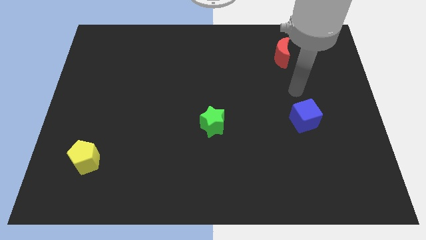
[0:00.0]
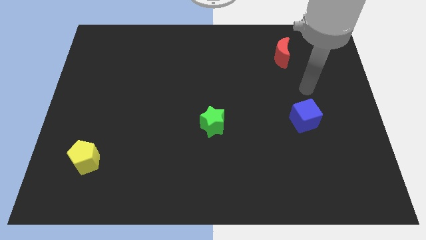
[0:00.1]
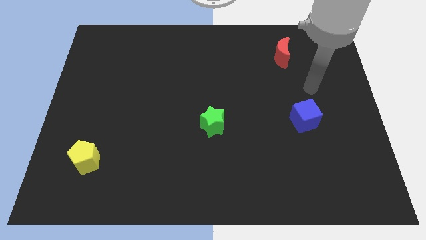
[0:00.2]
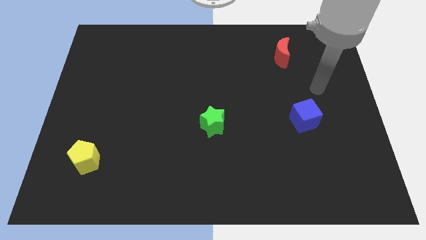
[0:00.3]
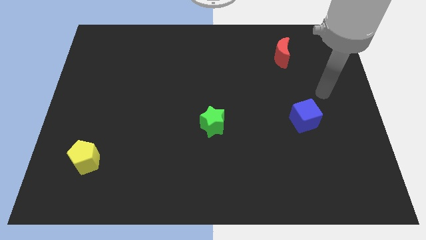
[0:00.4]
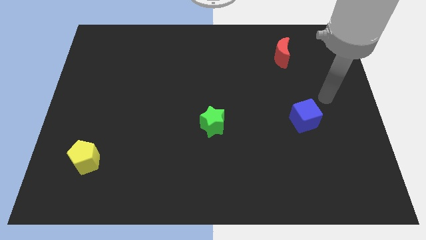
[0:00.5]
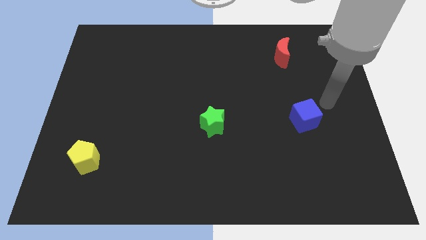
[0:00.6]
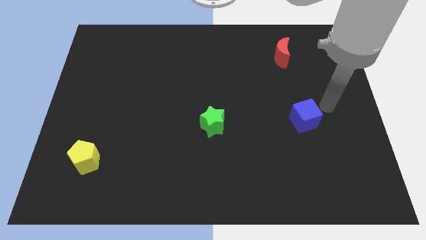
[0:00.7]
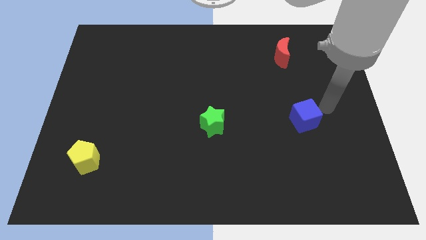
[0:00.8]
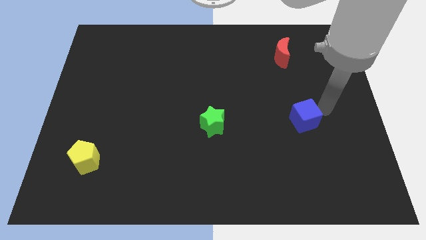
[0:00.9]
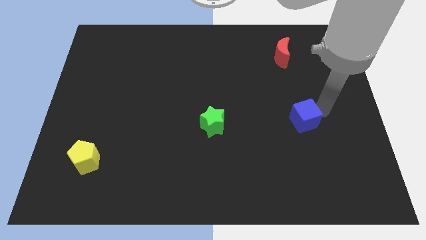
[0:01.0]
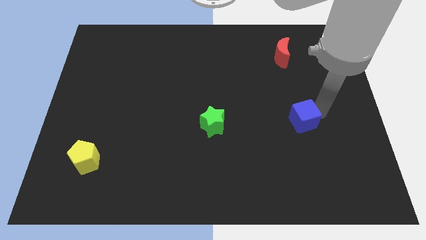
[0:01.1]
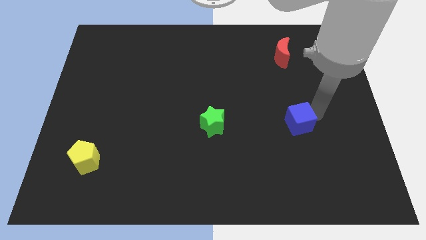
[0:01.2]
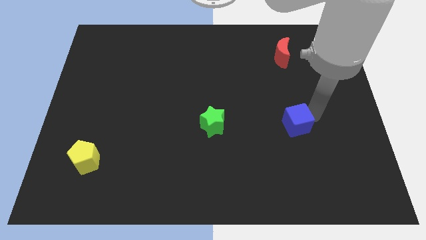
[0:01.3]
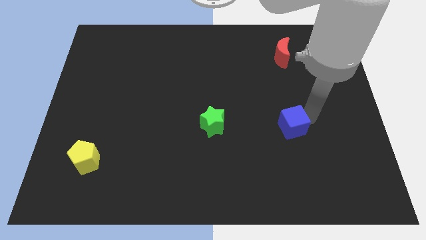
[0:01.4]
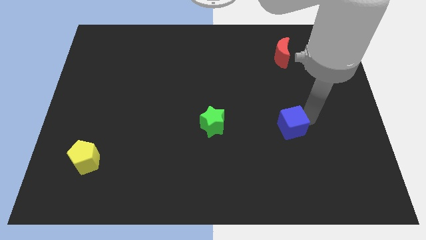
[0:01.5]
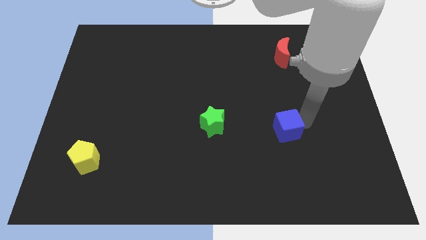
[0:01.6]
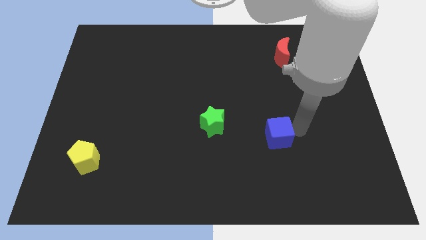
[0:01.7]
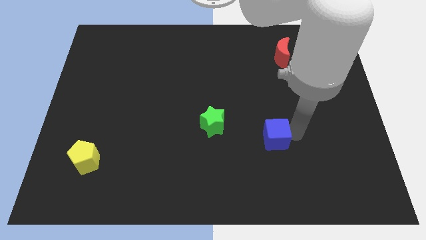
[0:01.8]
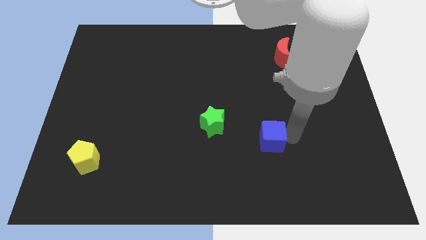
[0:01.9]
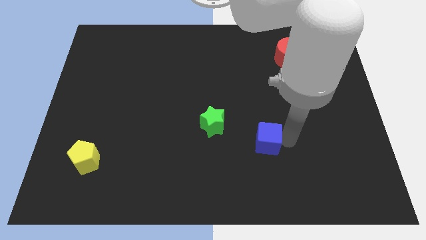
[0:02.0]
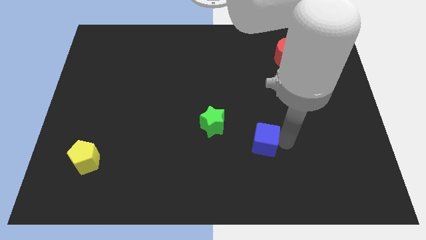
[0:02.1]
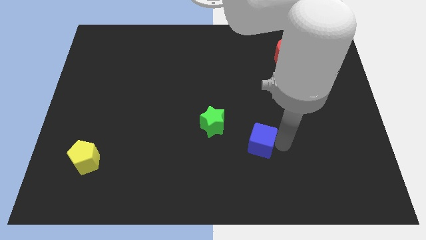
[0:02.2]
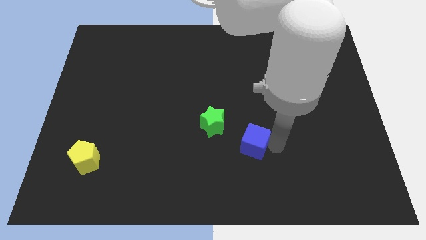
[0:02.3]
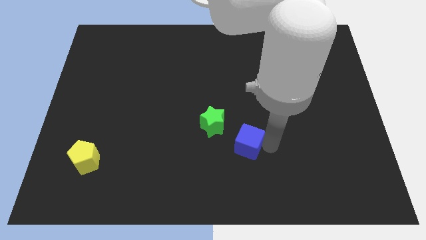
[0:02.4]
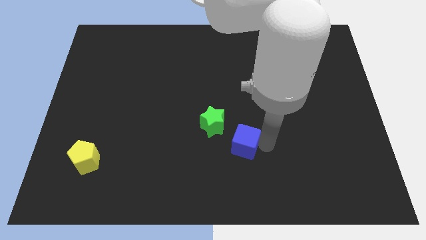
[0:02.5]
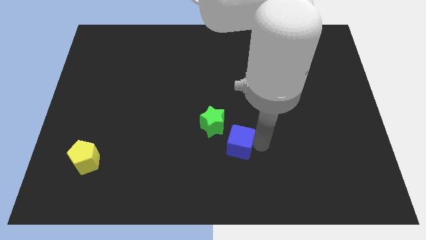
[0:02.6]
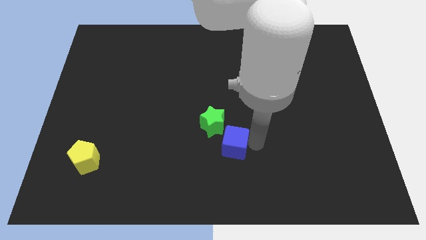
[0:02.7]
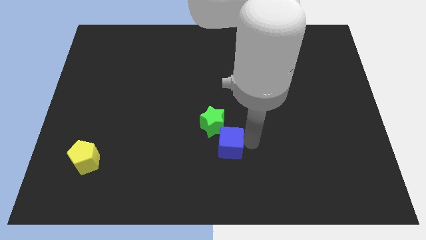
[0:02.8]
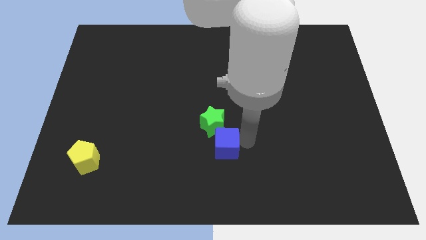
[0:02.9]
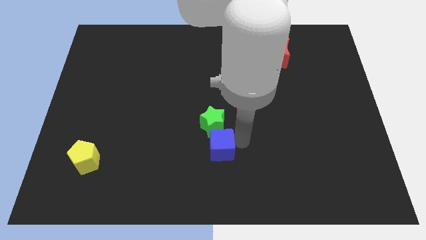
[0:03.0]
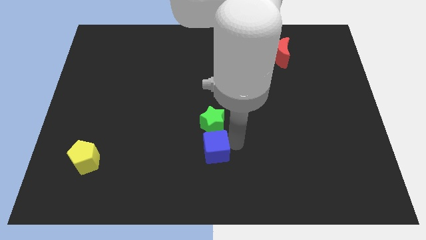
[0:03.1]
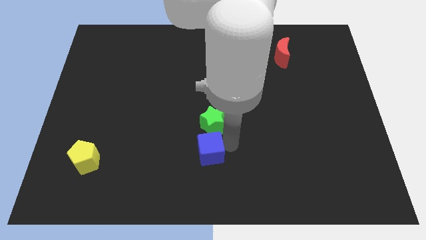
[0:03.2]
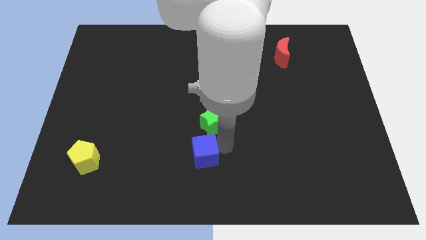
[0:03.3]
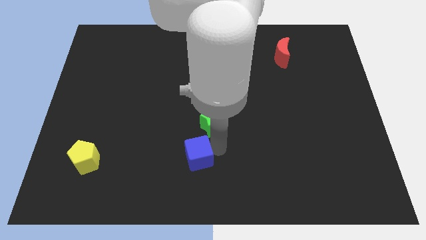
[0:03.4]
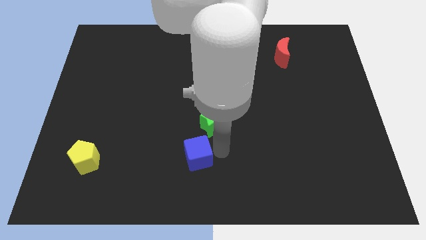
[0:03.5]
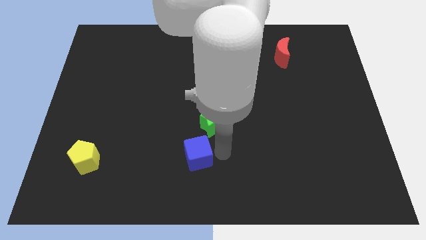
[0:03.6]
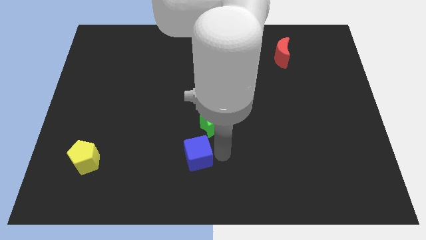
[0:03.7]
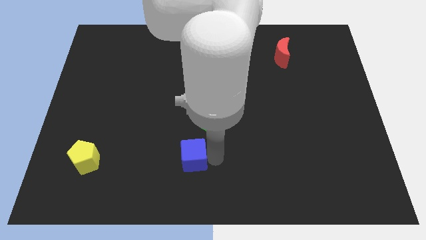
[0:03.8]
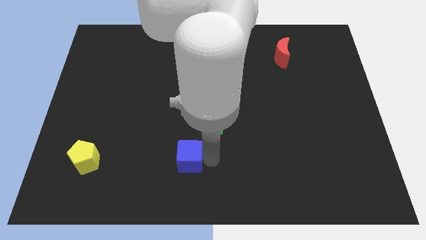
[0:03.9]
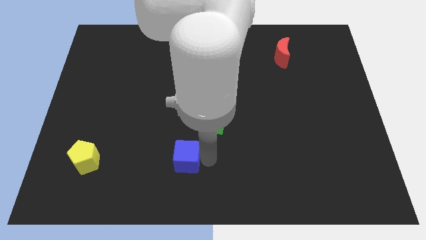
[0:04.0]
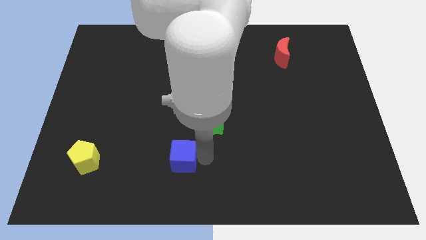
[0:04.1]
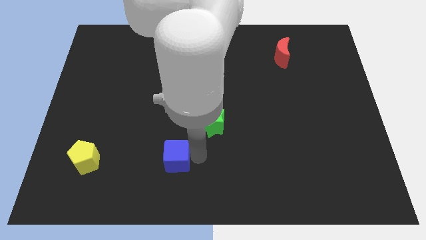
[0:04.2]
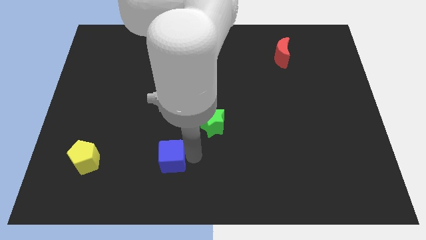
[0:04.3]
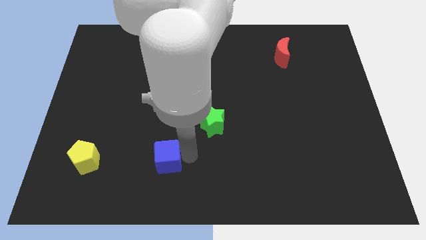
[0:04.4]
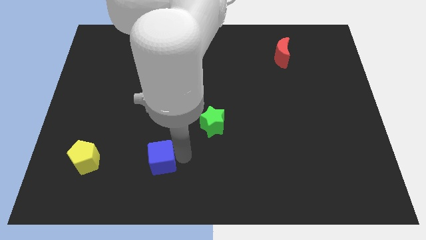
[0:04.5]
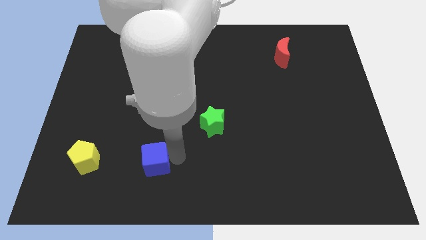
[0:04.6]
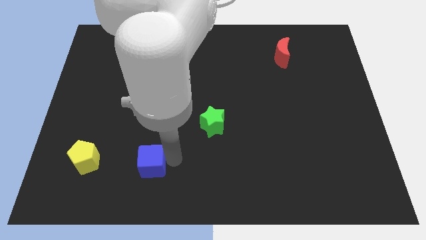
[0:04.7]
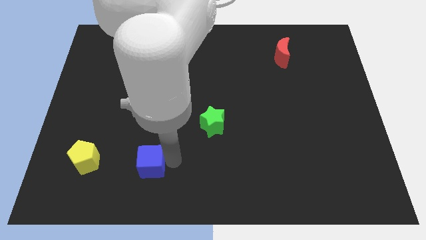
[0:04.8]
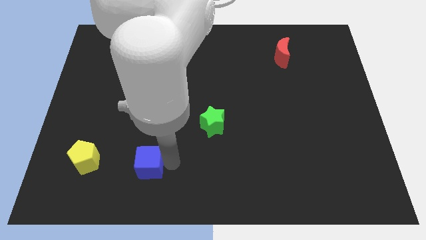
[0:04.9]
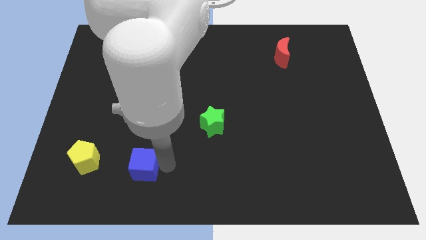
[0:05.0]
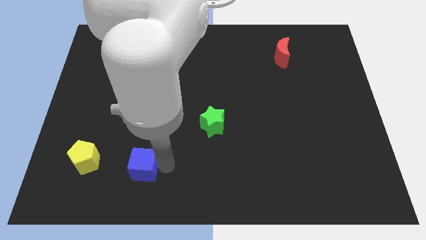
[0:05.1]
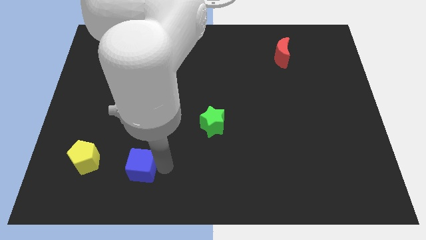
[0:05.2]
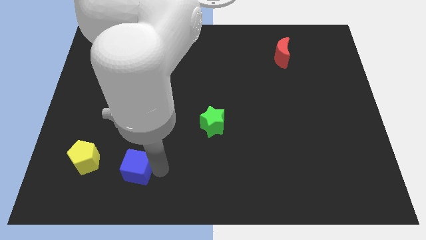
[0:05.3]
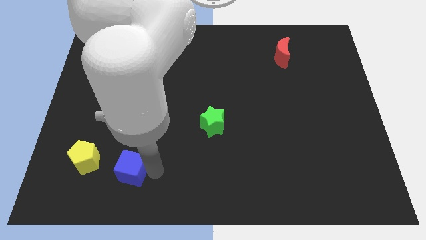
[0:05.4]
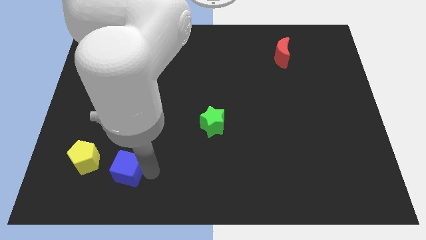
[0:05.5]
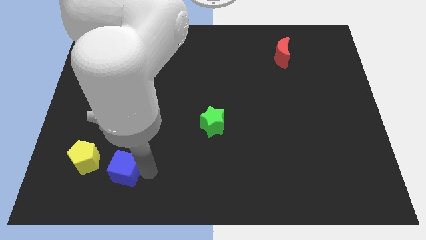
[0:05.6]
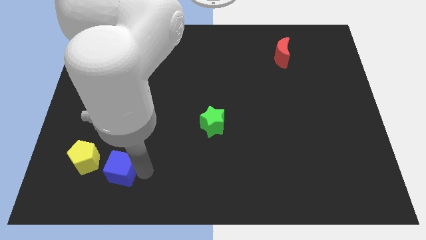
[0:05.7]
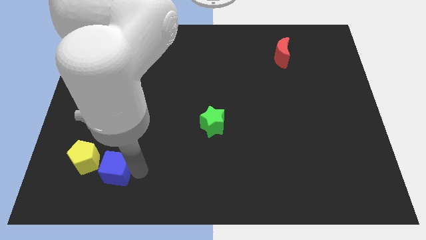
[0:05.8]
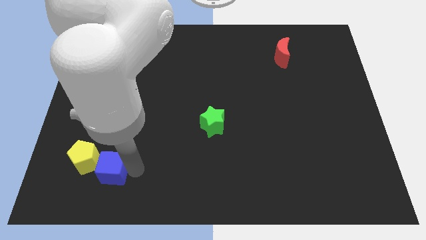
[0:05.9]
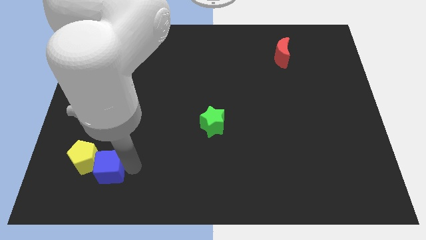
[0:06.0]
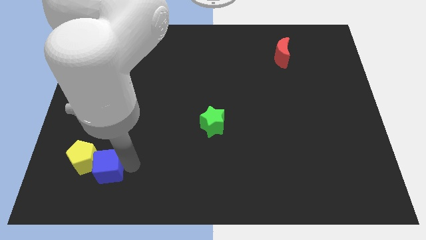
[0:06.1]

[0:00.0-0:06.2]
move the cube next to the pentagon

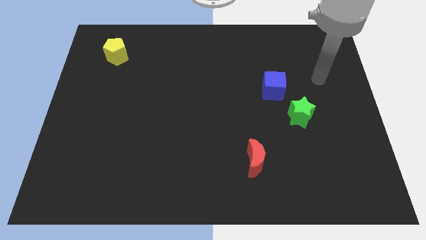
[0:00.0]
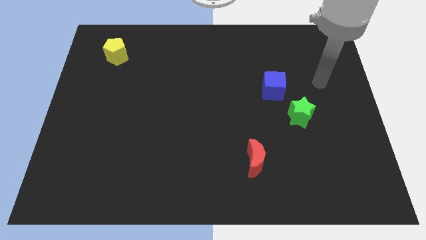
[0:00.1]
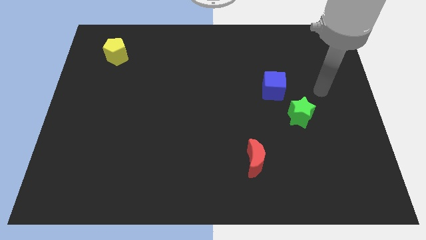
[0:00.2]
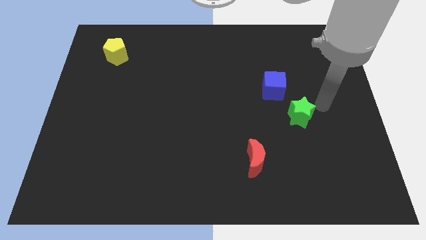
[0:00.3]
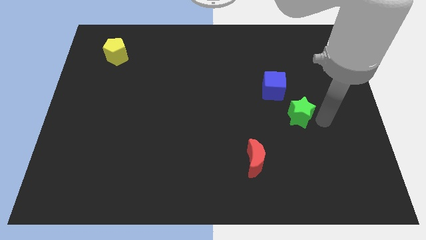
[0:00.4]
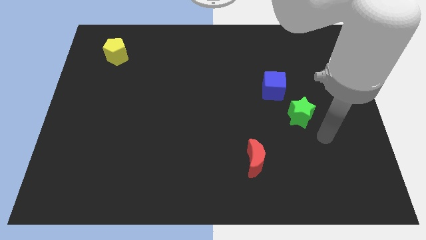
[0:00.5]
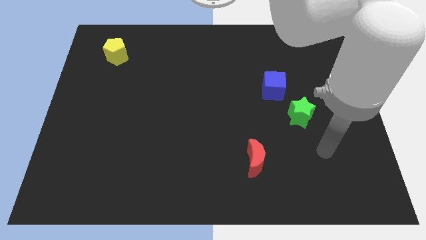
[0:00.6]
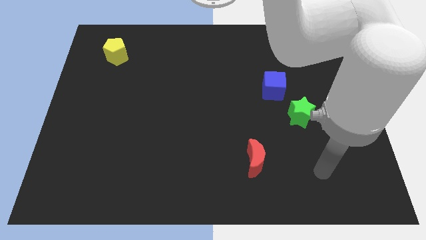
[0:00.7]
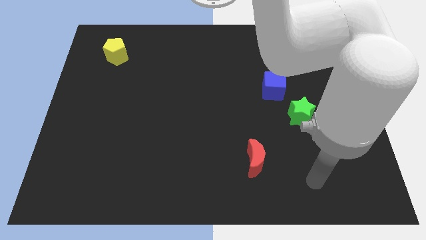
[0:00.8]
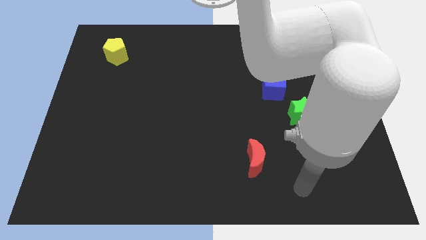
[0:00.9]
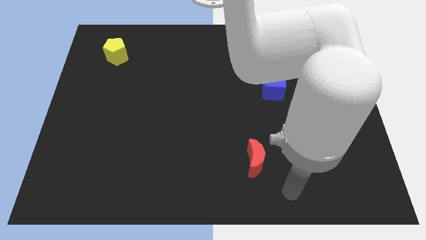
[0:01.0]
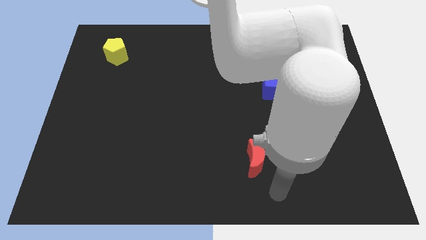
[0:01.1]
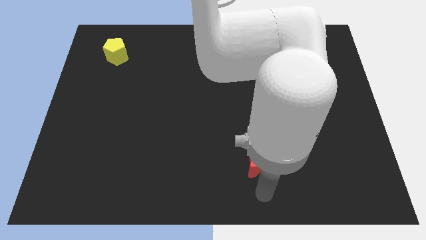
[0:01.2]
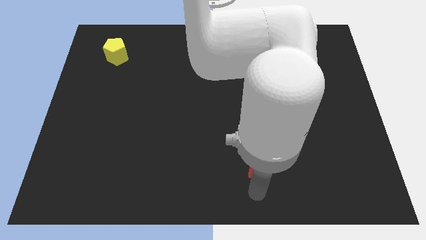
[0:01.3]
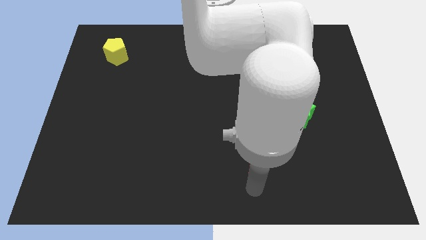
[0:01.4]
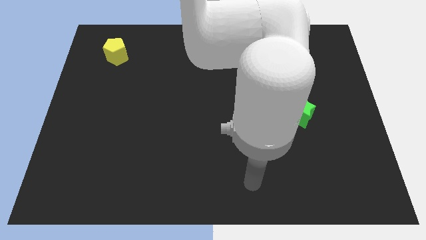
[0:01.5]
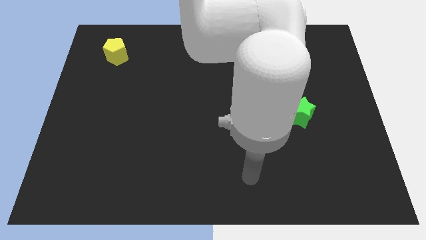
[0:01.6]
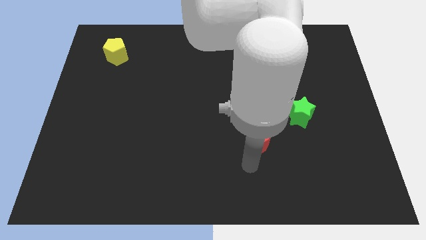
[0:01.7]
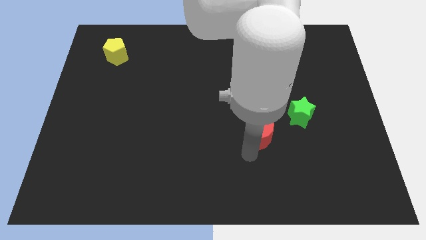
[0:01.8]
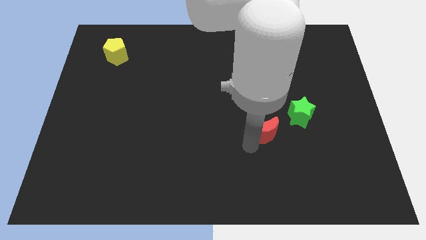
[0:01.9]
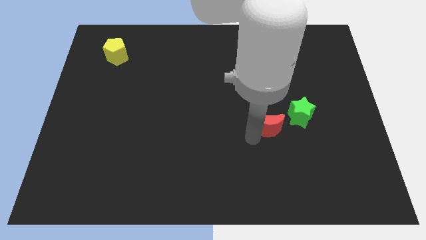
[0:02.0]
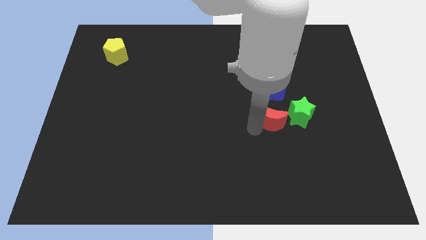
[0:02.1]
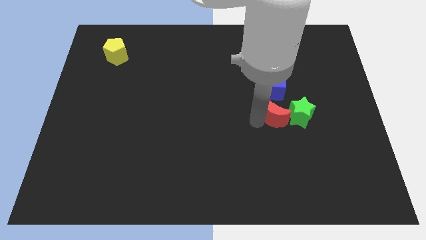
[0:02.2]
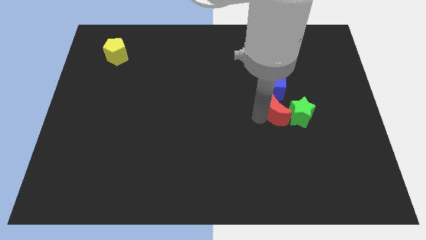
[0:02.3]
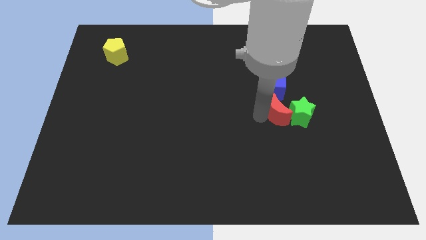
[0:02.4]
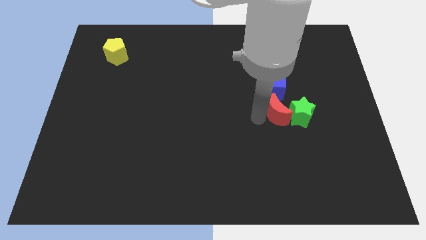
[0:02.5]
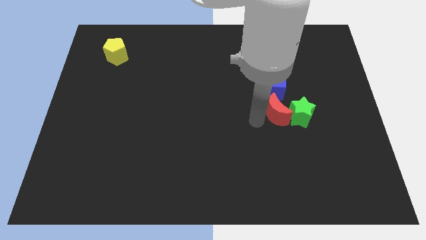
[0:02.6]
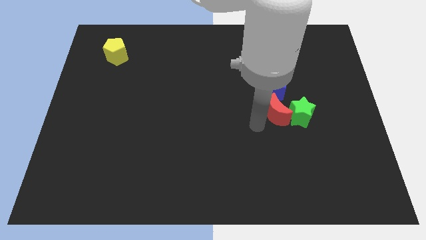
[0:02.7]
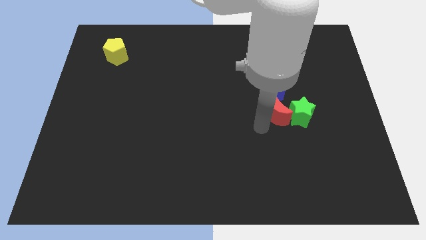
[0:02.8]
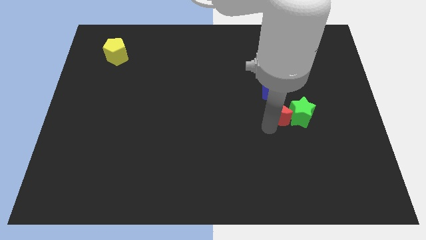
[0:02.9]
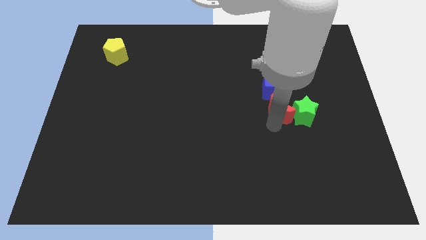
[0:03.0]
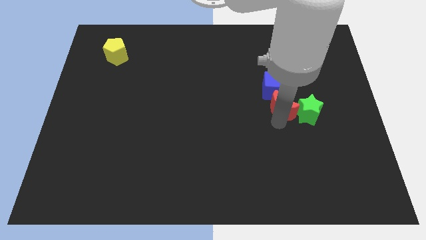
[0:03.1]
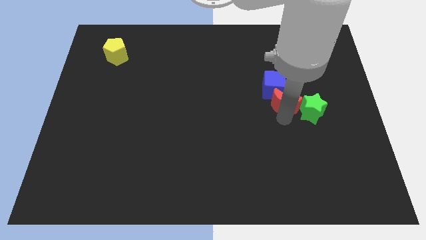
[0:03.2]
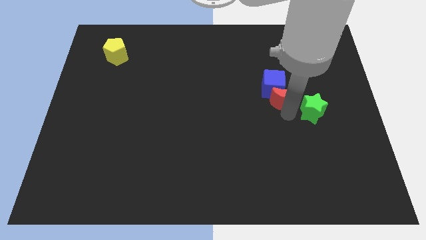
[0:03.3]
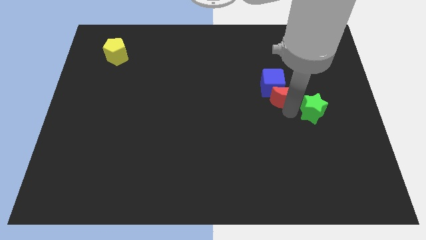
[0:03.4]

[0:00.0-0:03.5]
slide the red block next to the blue block
